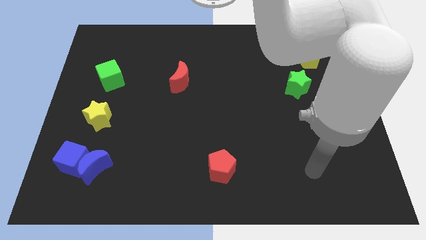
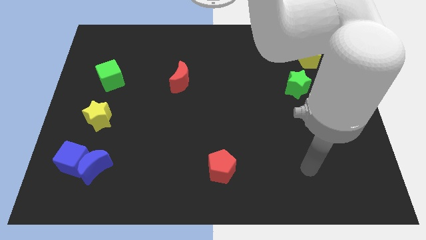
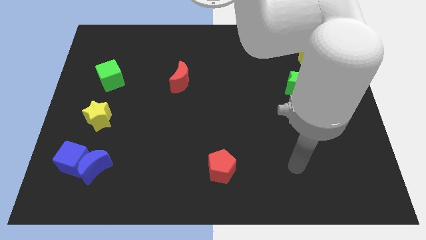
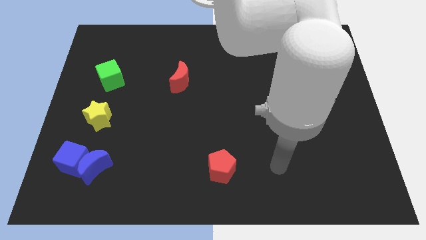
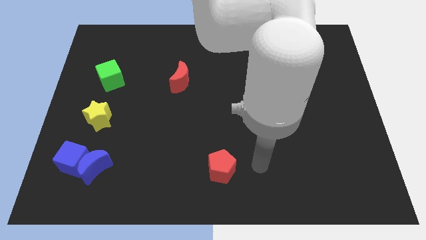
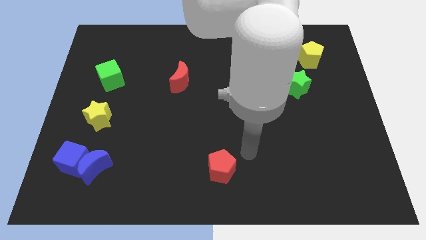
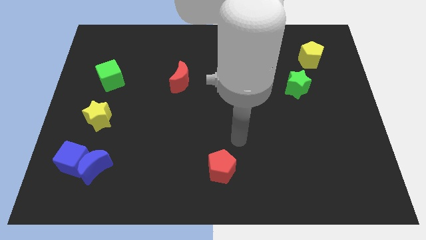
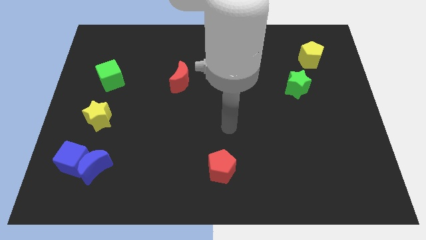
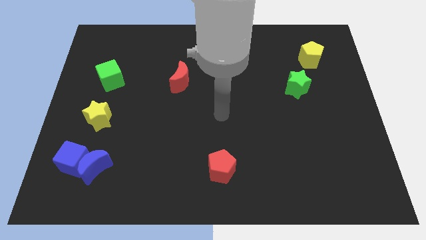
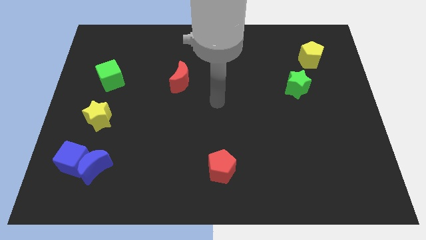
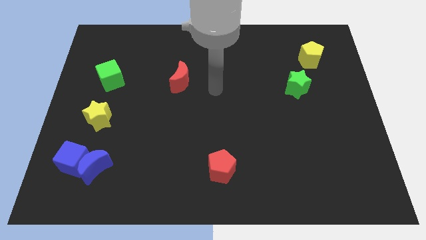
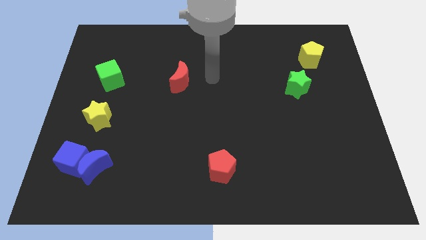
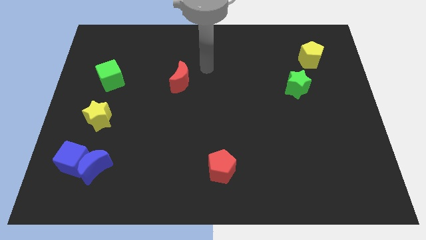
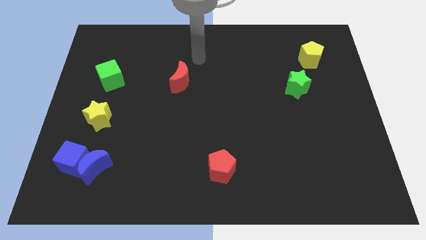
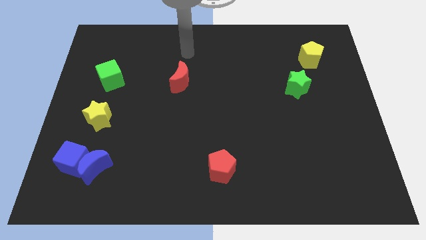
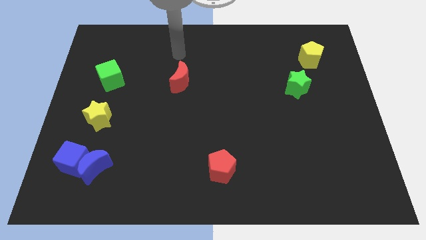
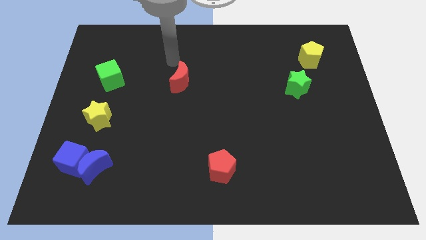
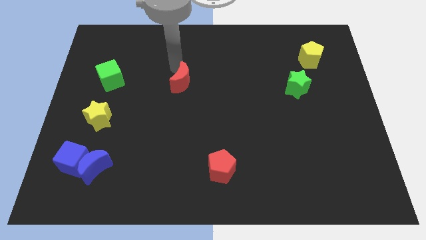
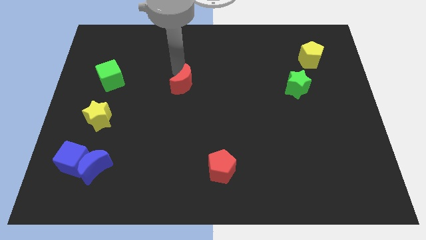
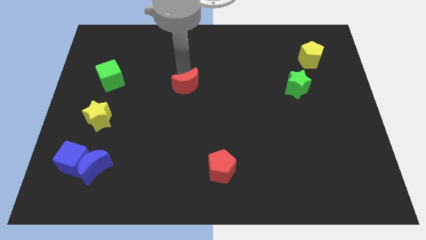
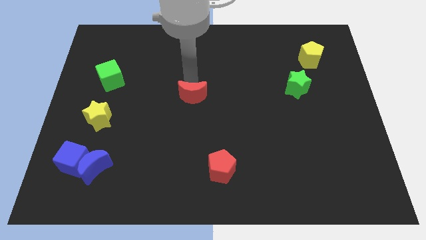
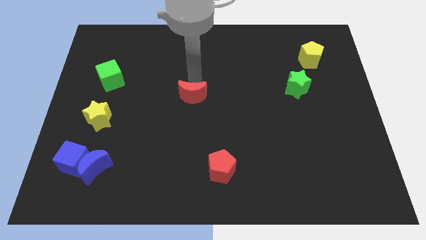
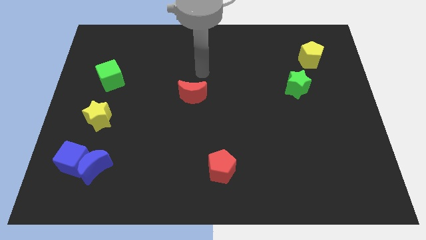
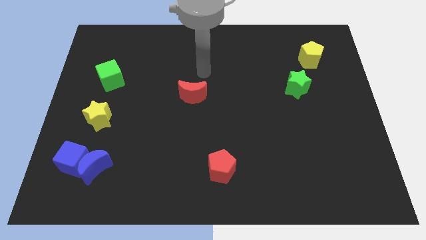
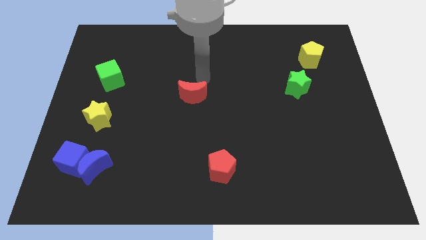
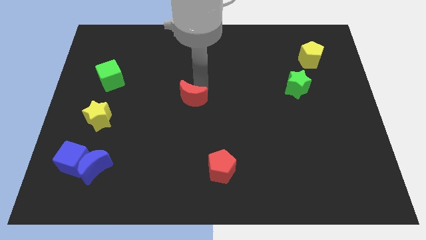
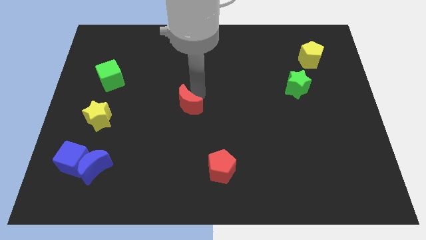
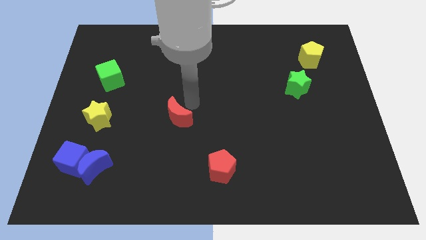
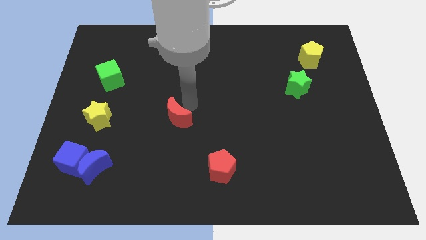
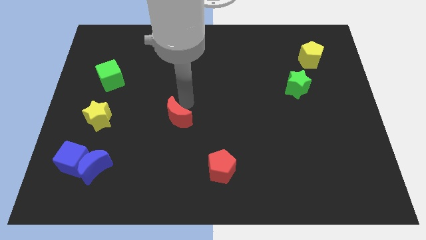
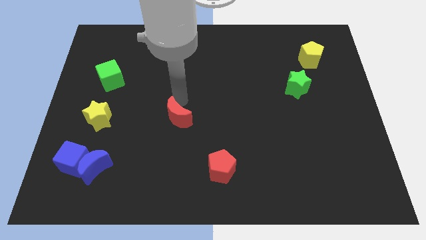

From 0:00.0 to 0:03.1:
move the red crescent diagonal to the right of the yellow star

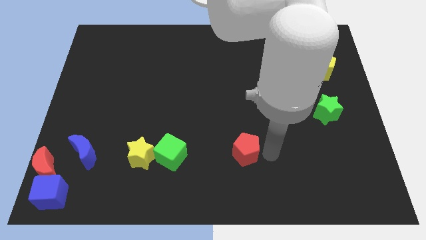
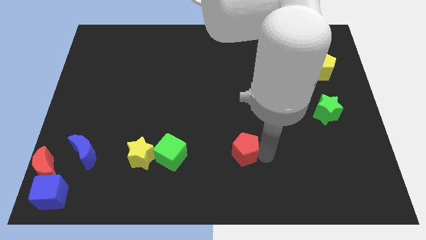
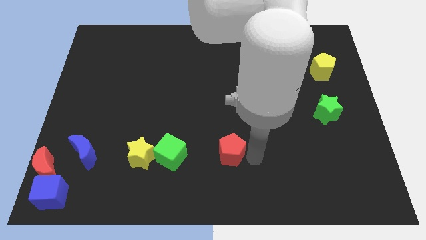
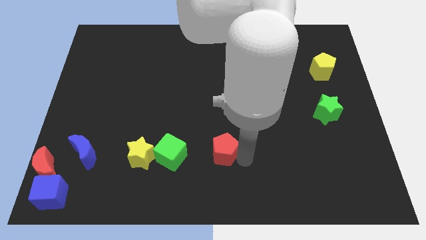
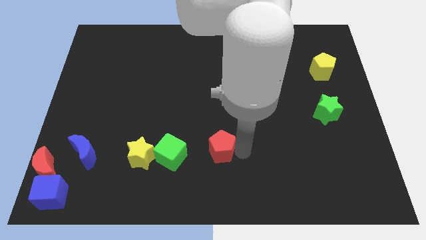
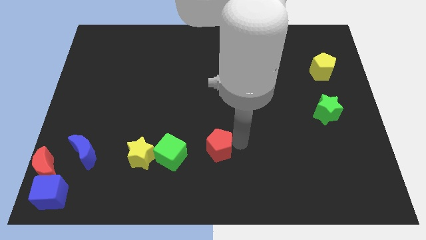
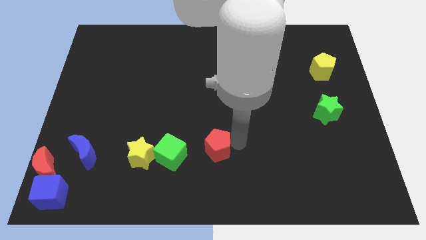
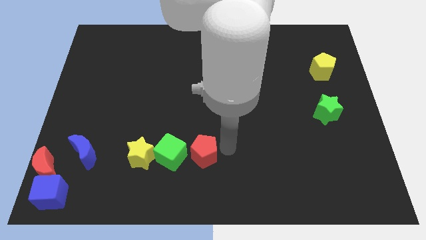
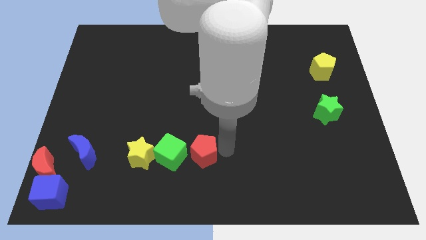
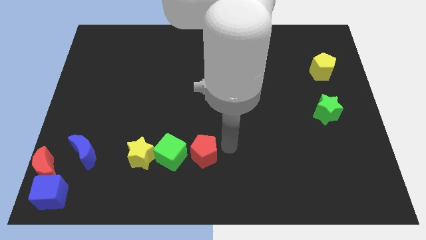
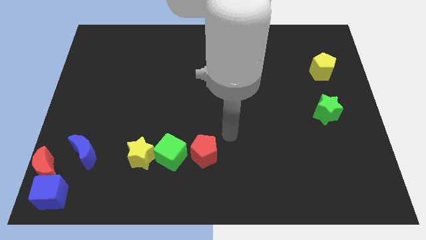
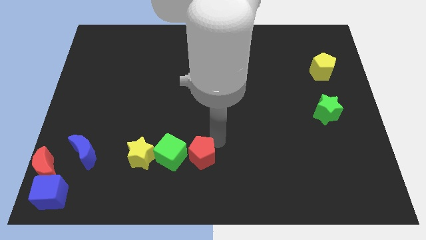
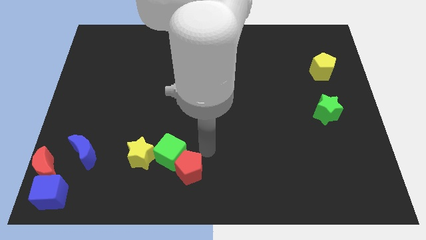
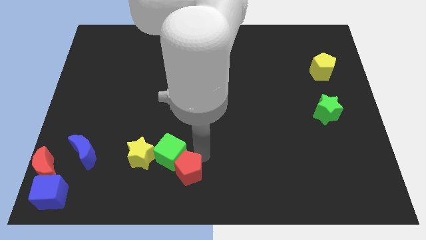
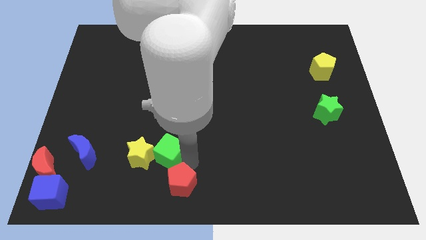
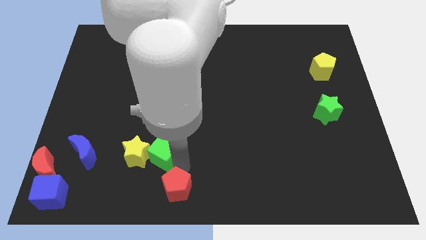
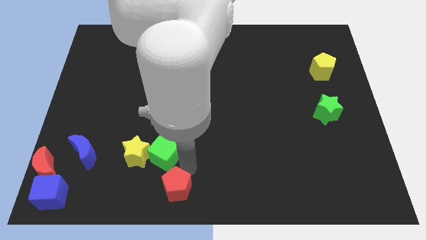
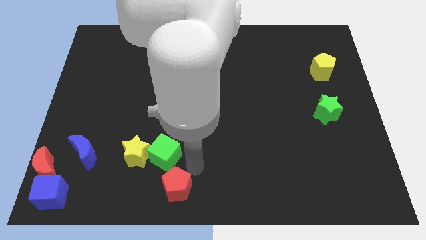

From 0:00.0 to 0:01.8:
place red pentagon below the green cube

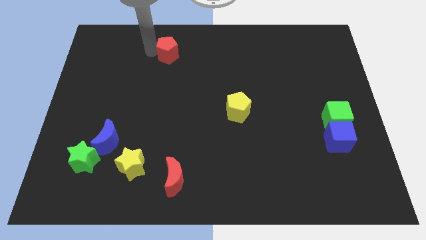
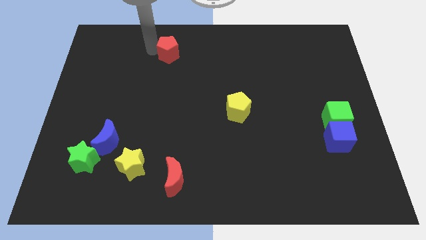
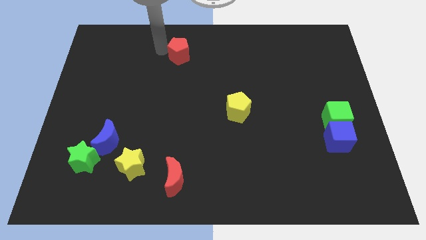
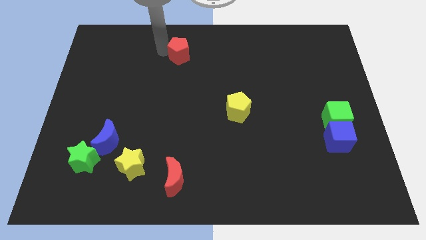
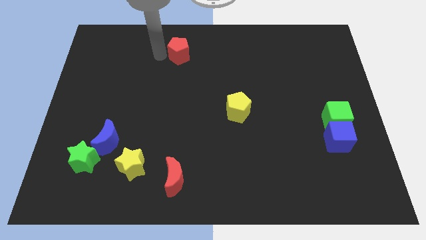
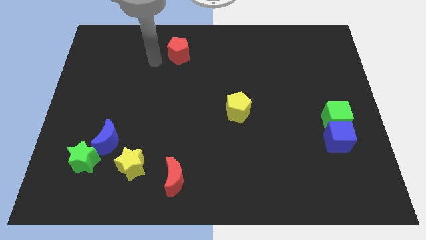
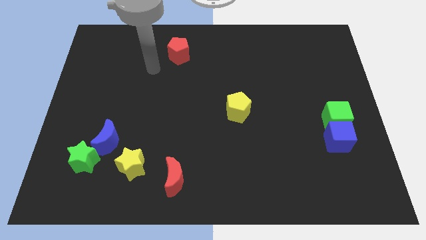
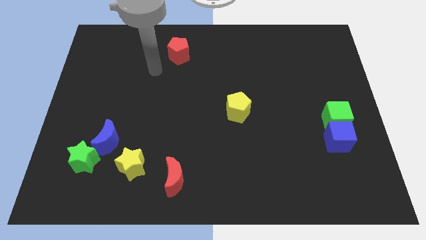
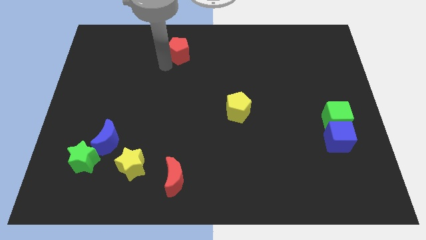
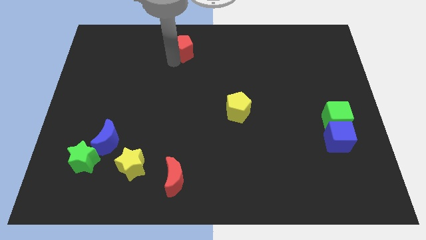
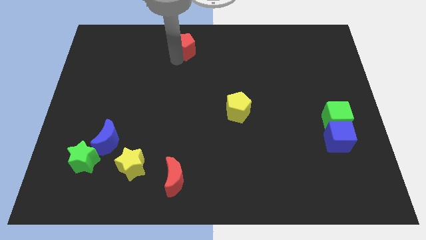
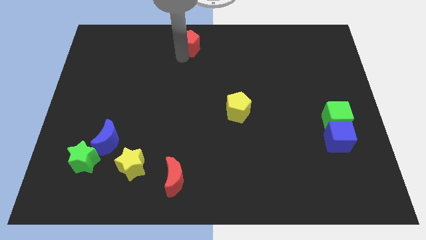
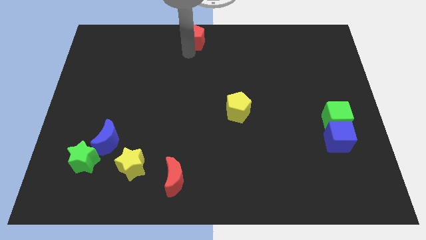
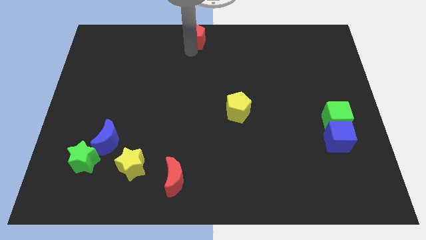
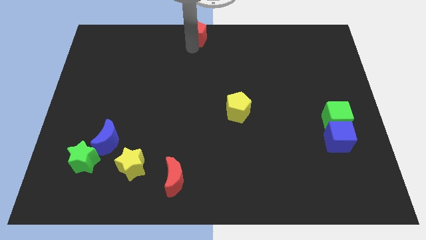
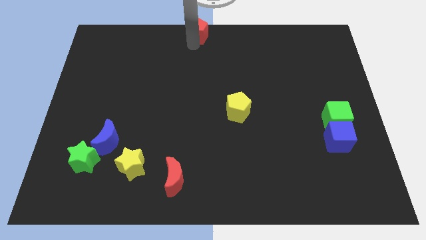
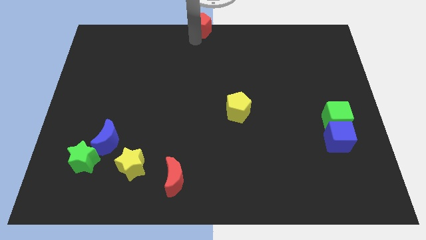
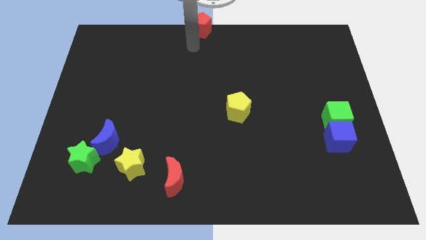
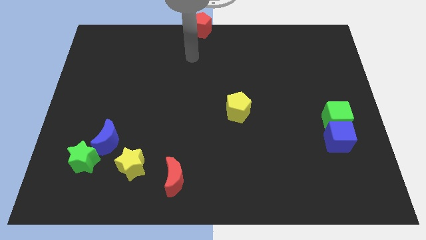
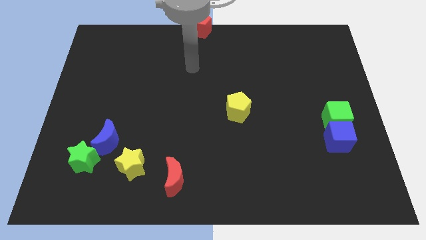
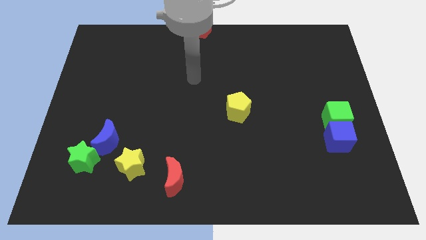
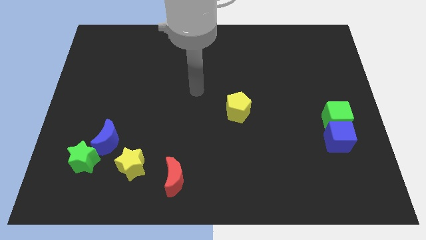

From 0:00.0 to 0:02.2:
slide the red pentagon to the top center of the board

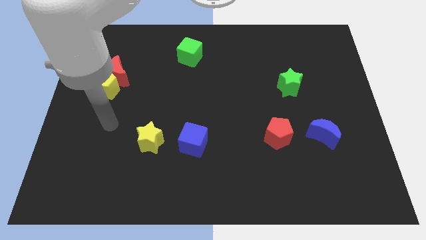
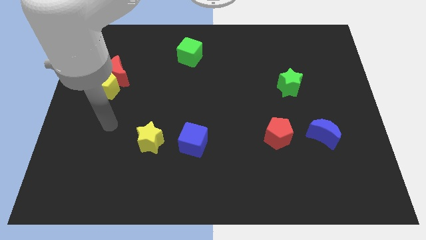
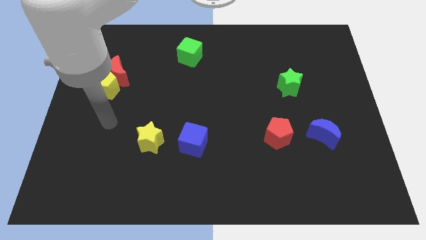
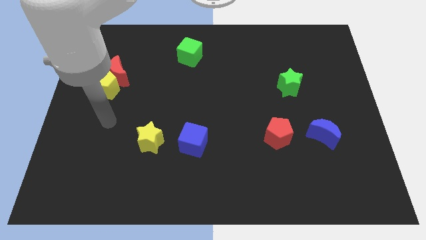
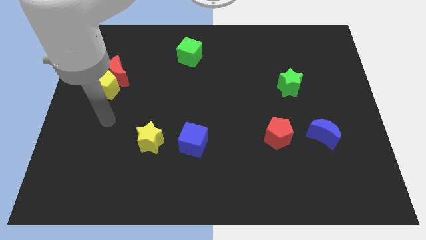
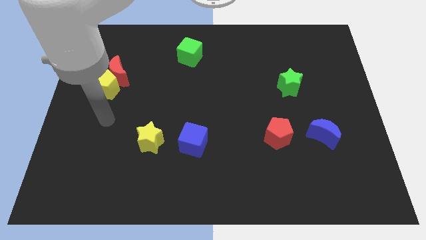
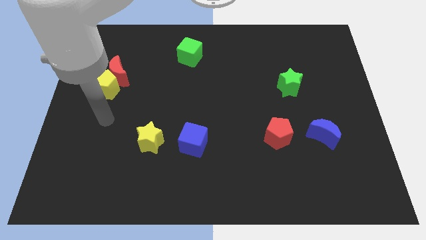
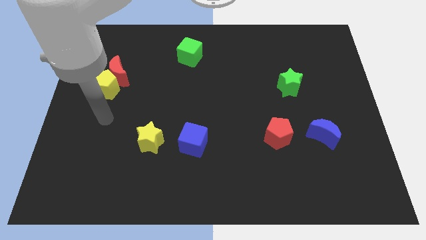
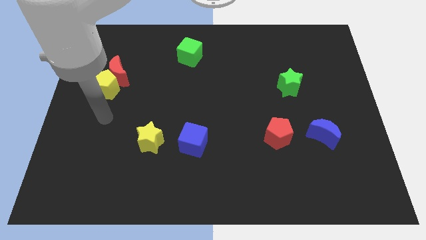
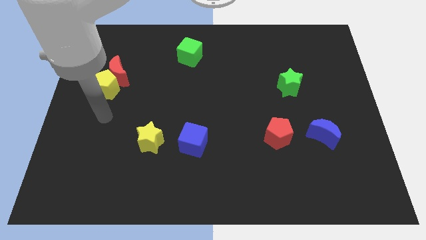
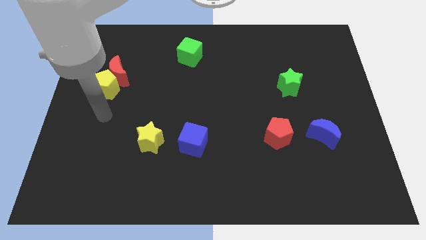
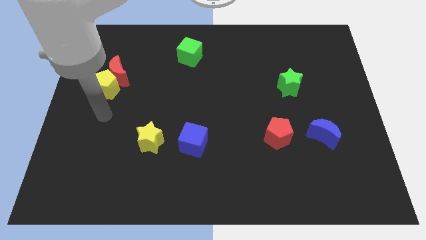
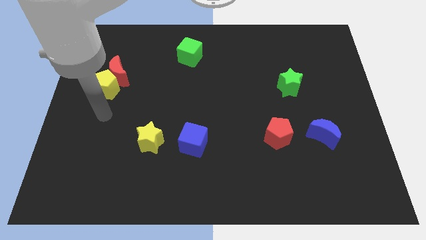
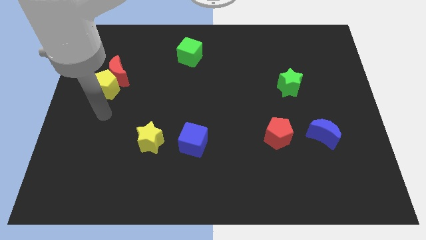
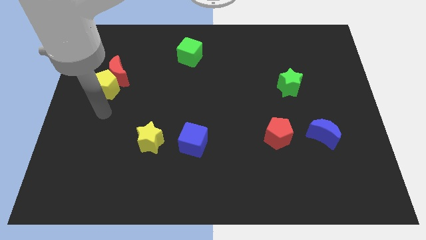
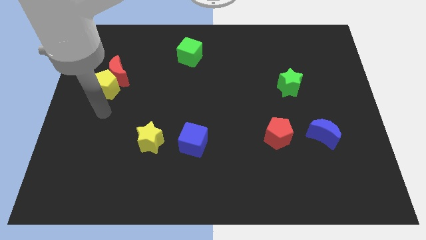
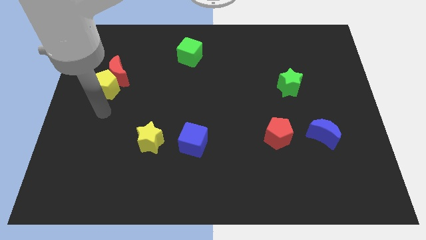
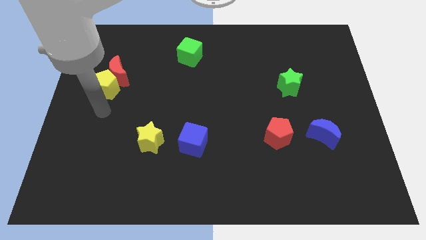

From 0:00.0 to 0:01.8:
slide your arm to the bottom side of the yellow pentagon

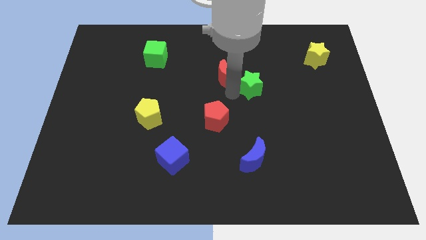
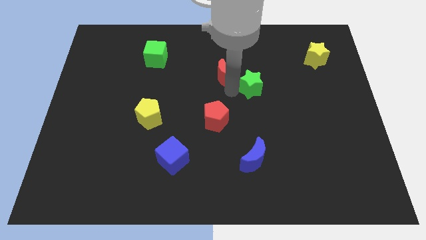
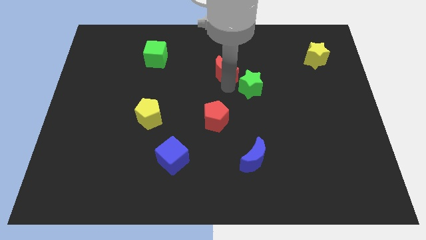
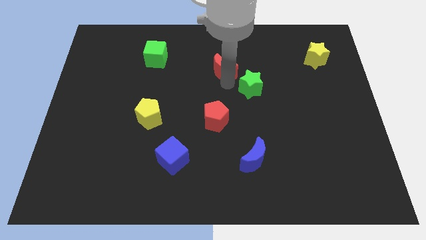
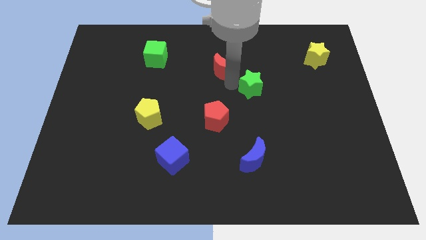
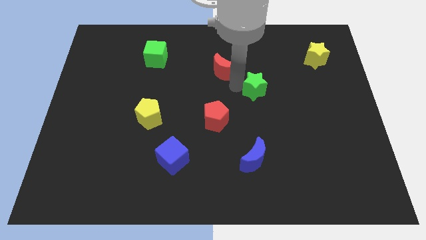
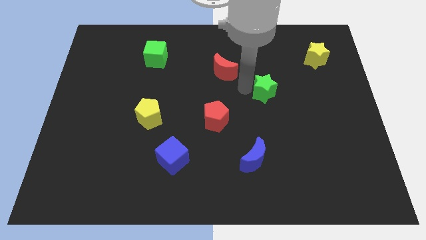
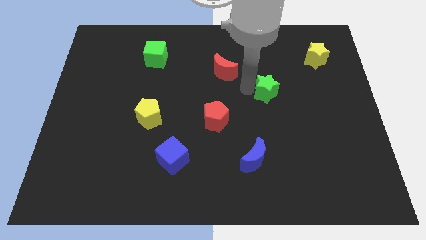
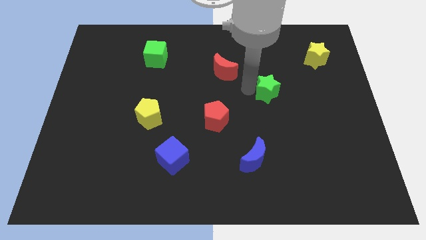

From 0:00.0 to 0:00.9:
separate green star from red moon
